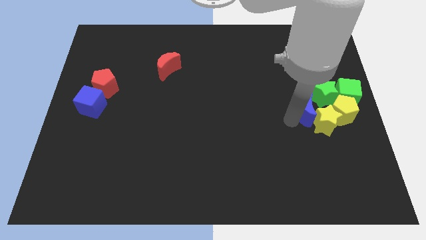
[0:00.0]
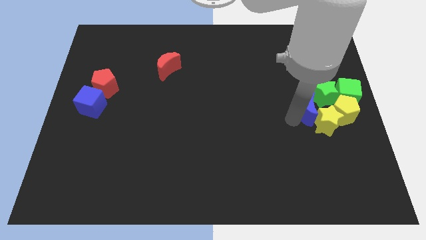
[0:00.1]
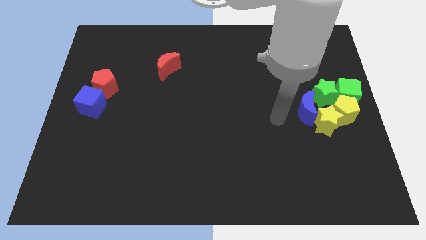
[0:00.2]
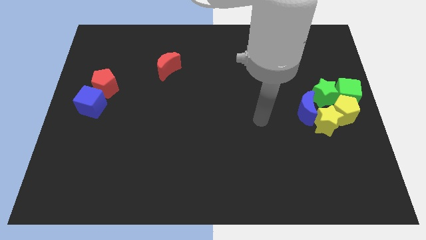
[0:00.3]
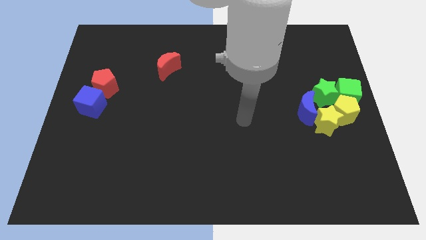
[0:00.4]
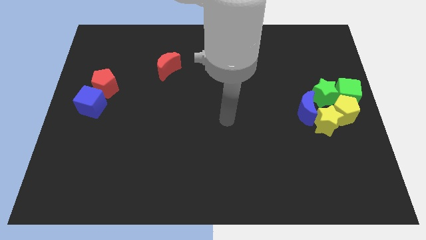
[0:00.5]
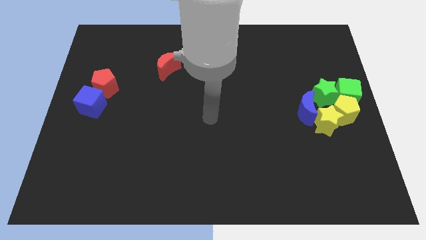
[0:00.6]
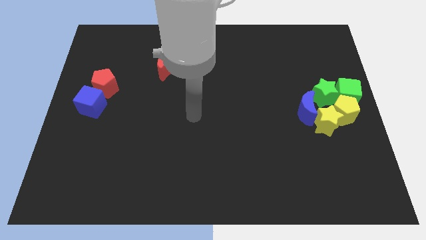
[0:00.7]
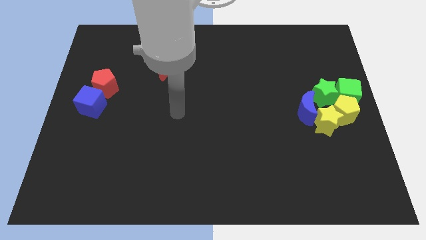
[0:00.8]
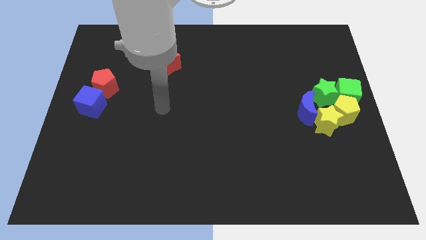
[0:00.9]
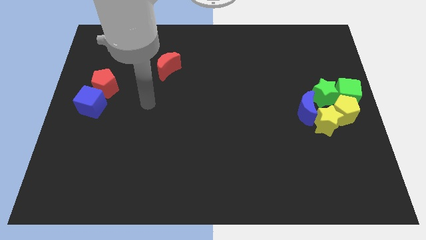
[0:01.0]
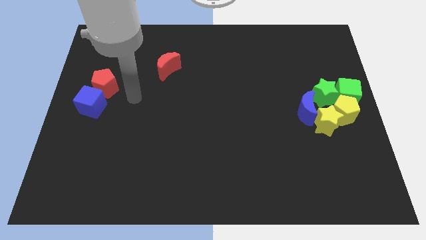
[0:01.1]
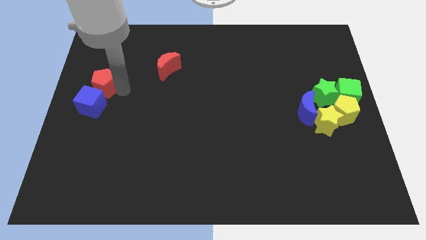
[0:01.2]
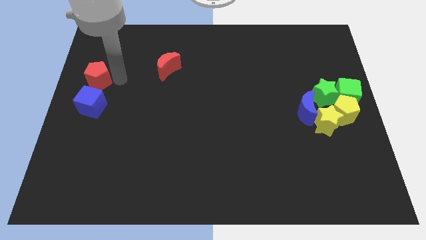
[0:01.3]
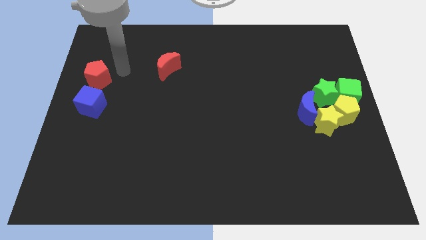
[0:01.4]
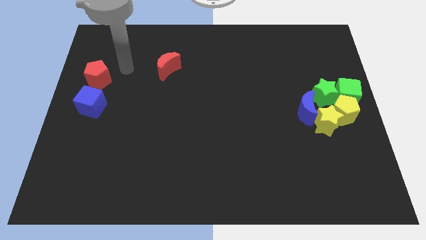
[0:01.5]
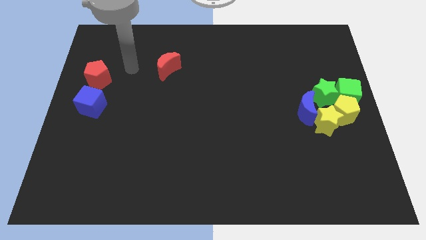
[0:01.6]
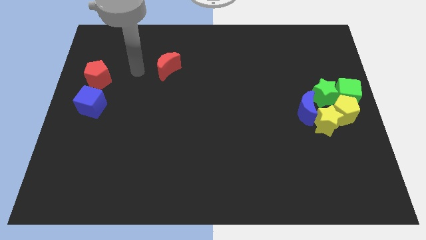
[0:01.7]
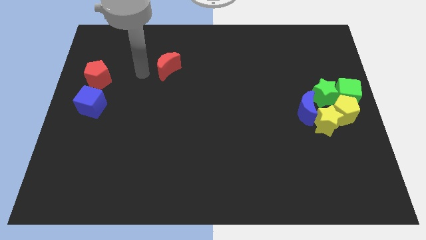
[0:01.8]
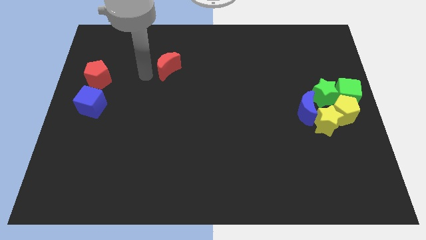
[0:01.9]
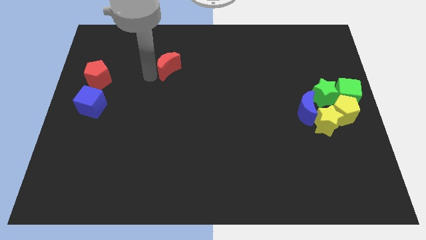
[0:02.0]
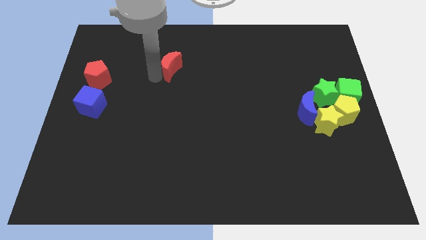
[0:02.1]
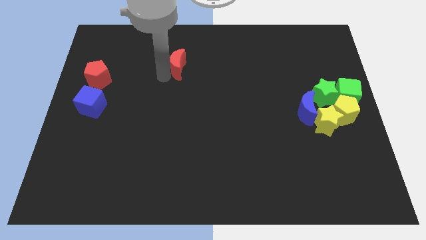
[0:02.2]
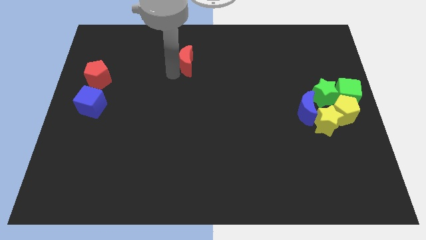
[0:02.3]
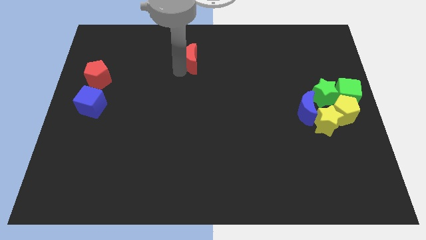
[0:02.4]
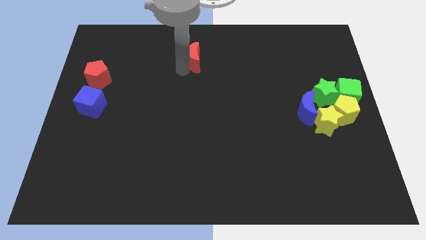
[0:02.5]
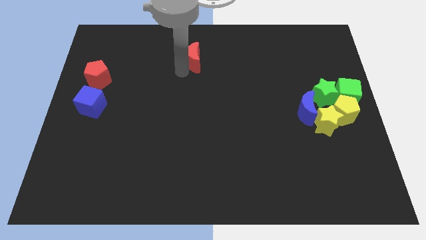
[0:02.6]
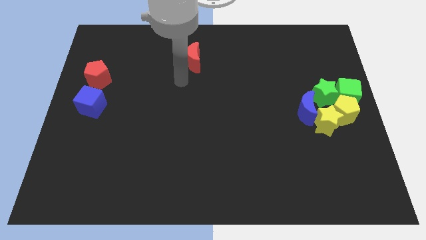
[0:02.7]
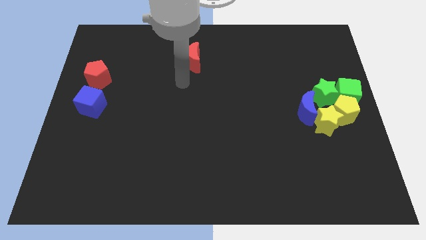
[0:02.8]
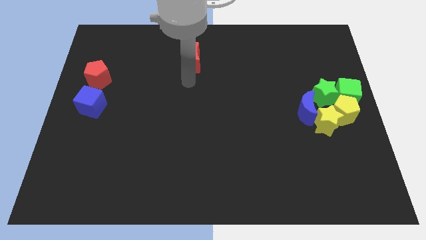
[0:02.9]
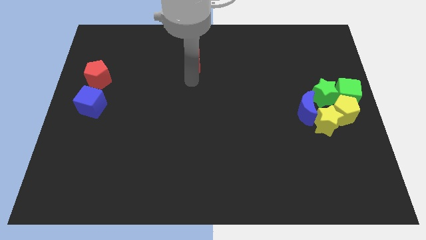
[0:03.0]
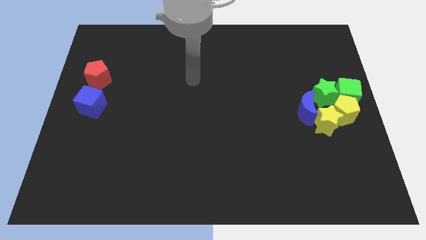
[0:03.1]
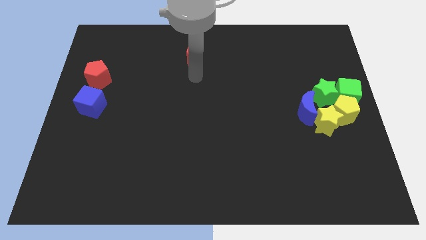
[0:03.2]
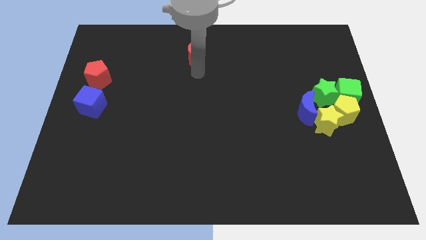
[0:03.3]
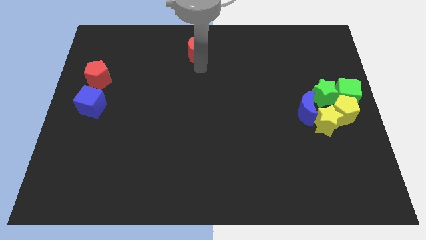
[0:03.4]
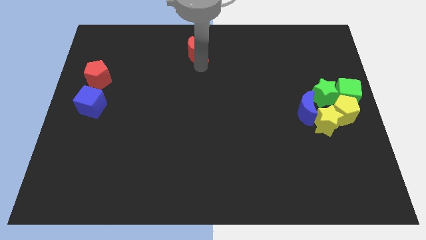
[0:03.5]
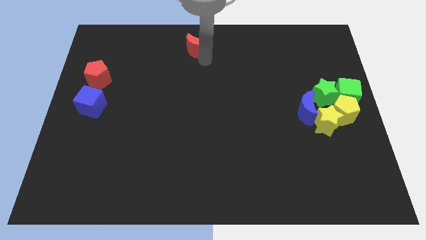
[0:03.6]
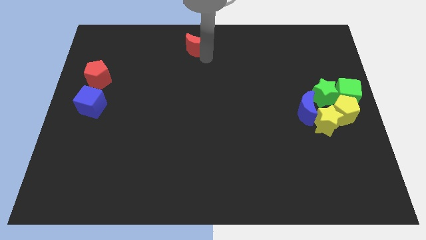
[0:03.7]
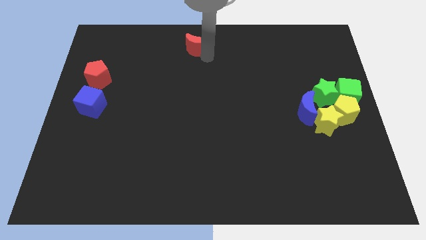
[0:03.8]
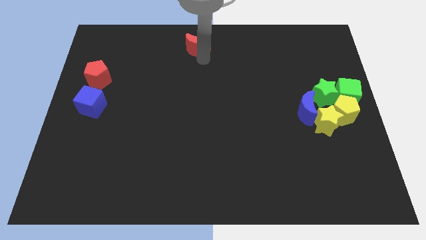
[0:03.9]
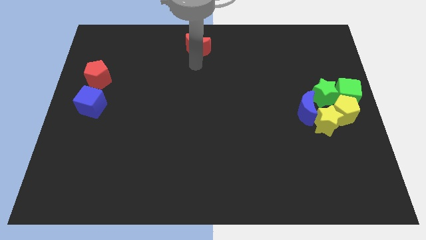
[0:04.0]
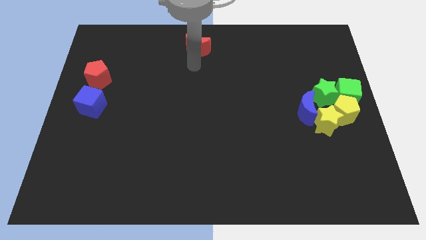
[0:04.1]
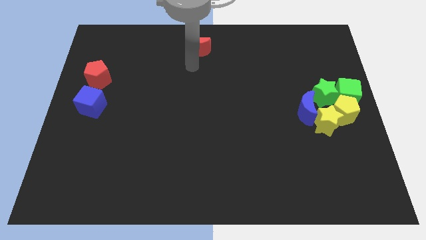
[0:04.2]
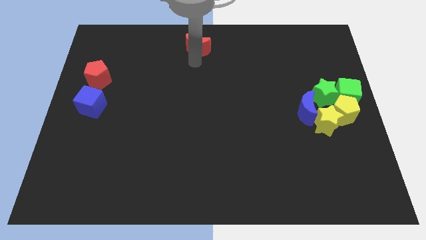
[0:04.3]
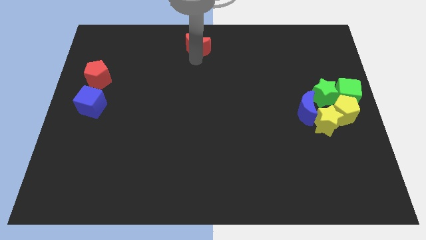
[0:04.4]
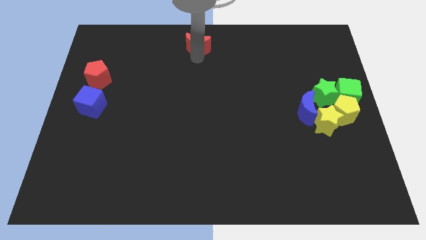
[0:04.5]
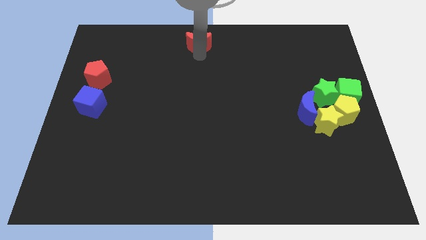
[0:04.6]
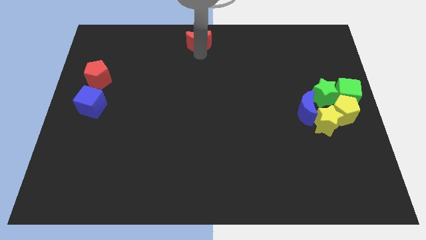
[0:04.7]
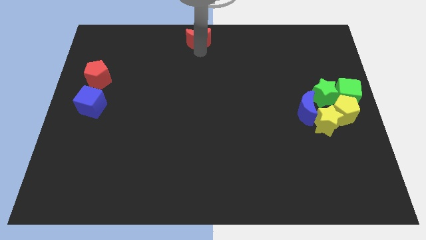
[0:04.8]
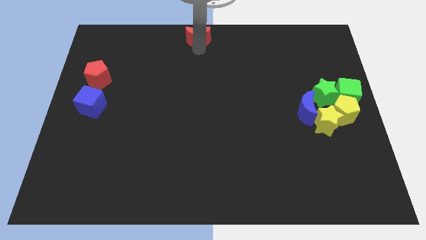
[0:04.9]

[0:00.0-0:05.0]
push the red crescent to the top center of the board

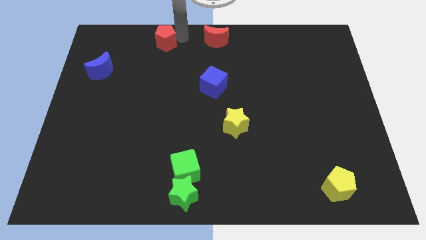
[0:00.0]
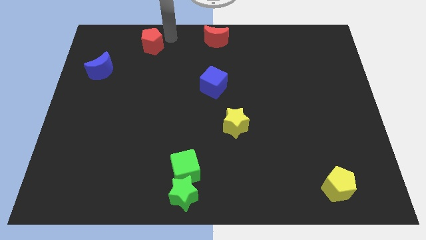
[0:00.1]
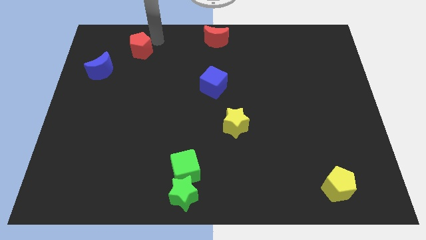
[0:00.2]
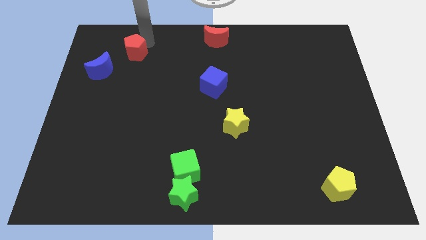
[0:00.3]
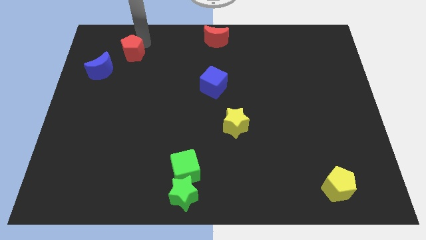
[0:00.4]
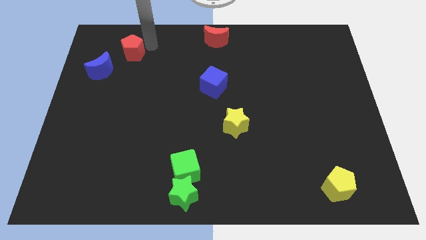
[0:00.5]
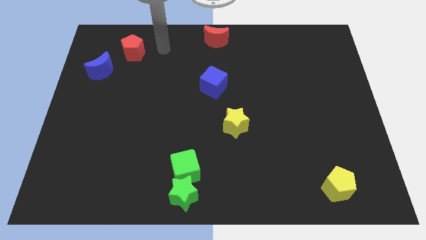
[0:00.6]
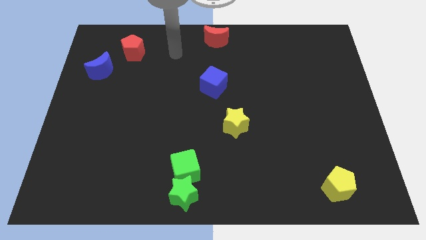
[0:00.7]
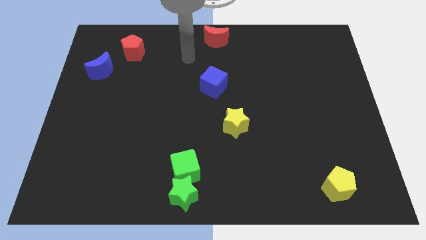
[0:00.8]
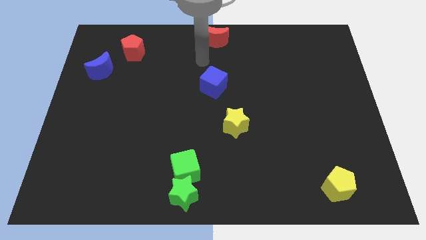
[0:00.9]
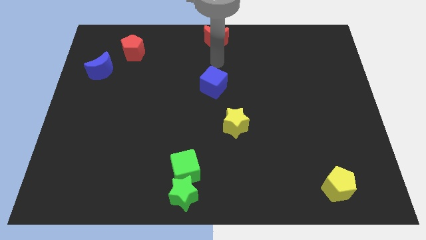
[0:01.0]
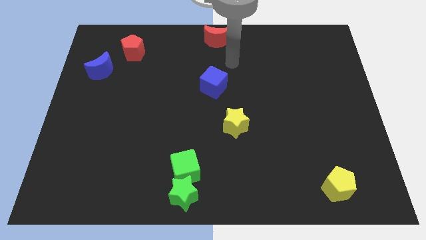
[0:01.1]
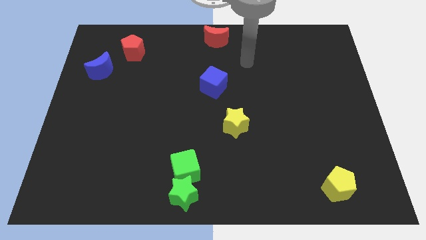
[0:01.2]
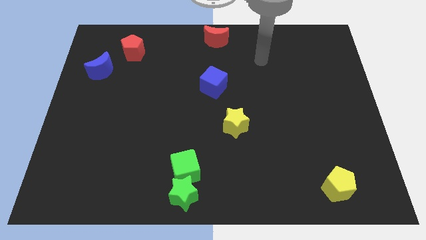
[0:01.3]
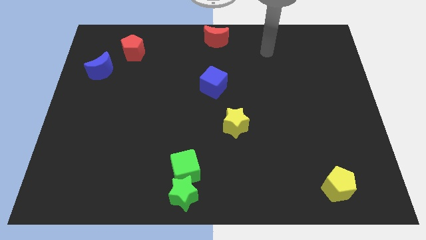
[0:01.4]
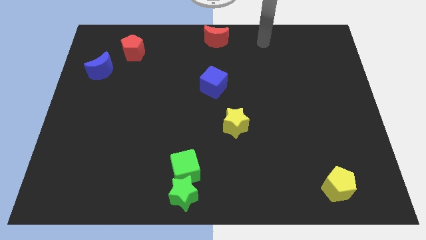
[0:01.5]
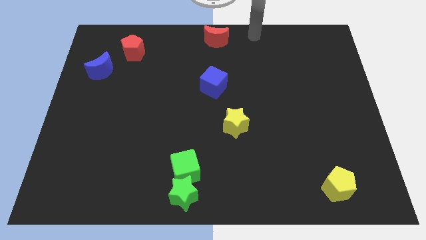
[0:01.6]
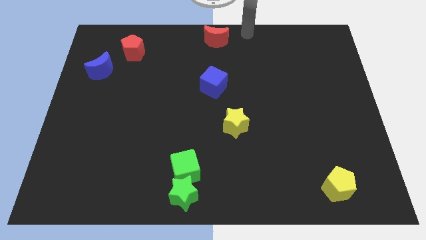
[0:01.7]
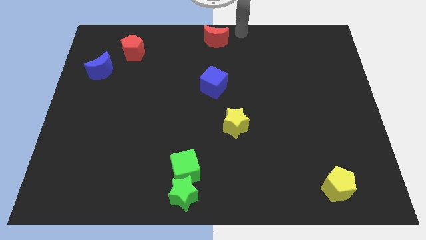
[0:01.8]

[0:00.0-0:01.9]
push the red pentagon to the left side of the board

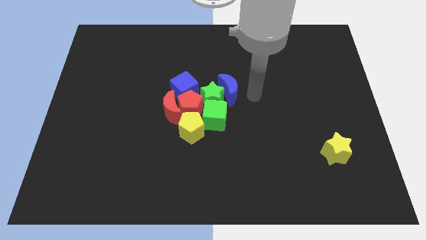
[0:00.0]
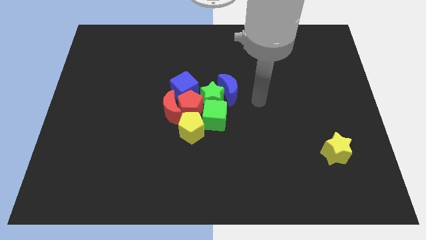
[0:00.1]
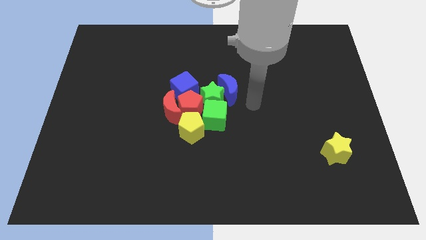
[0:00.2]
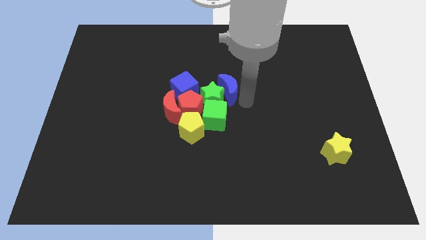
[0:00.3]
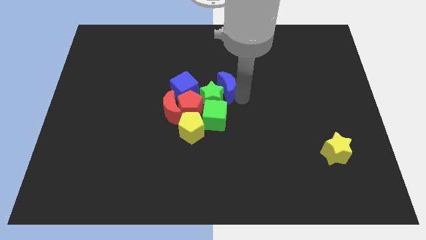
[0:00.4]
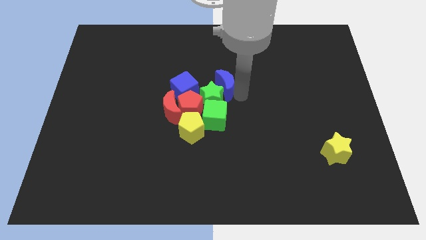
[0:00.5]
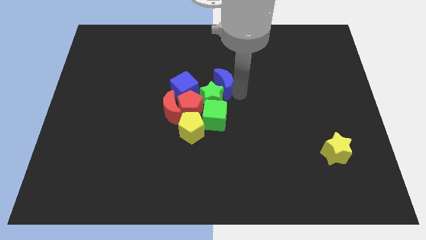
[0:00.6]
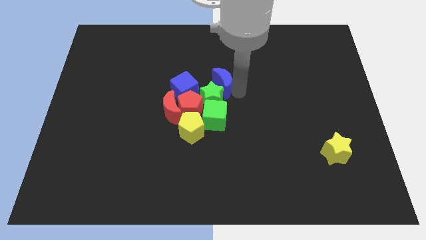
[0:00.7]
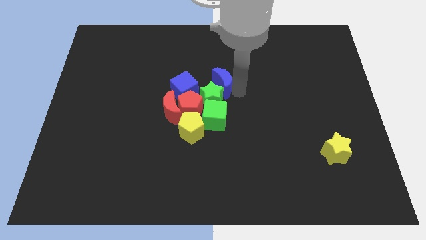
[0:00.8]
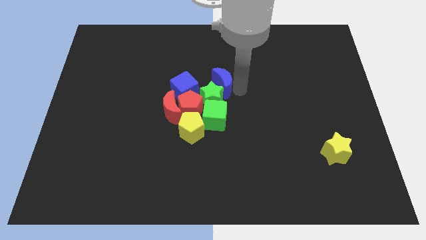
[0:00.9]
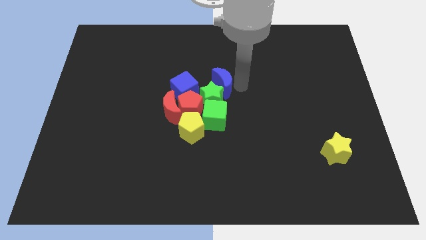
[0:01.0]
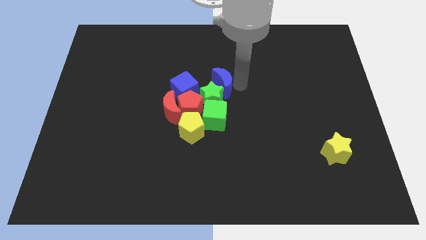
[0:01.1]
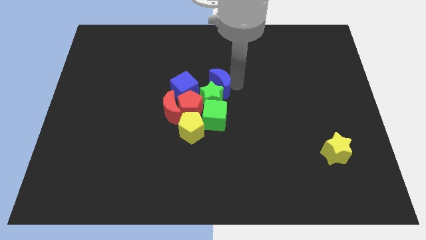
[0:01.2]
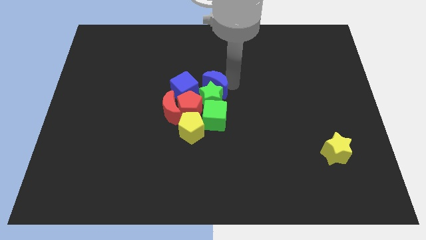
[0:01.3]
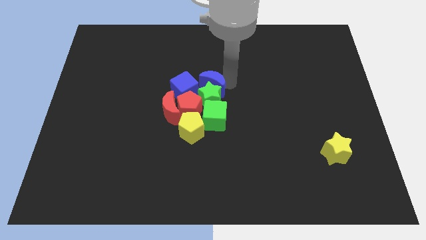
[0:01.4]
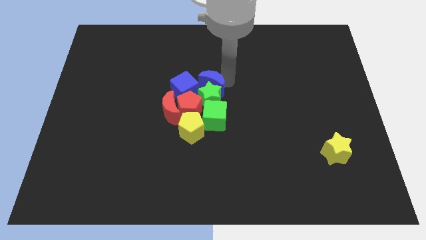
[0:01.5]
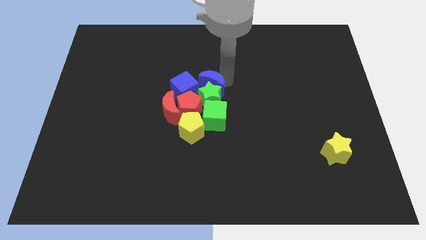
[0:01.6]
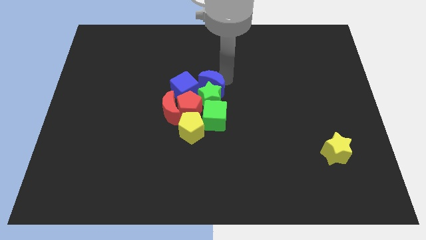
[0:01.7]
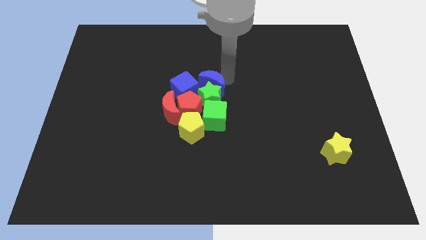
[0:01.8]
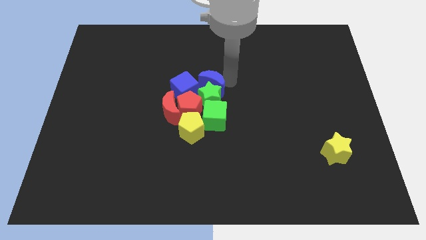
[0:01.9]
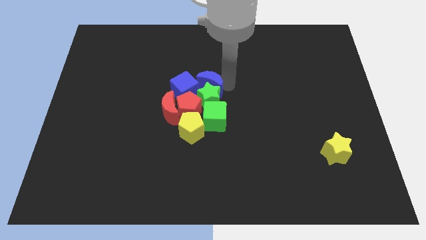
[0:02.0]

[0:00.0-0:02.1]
place the blue crescent above the green star

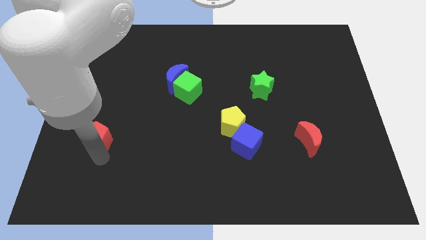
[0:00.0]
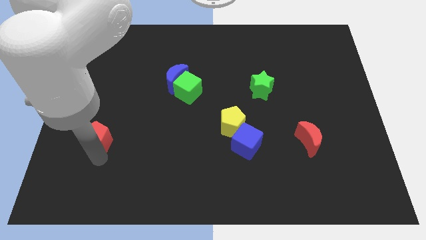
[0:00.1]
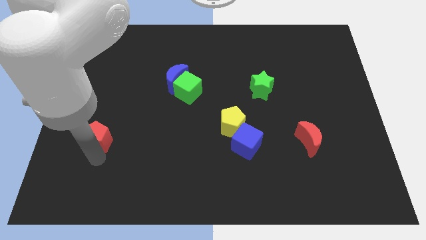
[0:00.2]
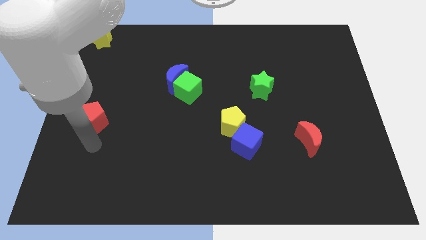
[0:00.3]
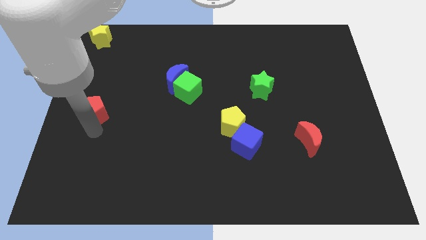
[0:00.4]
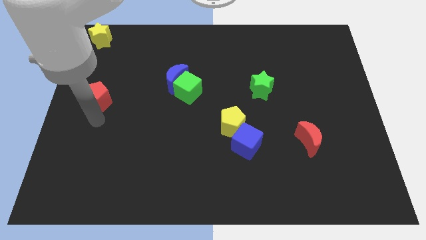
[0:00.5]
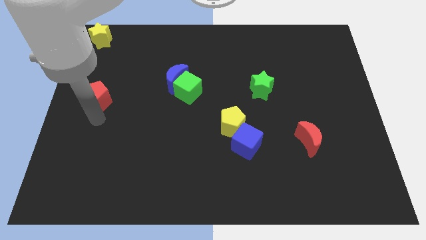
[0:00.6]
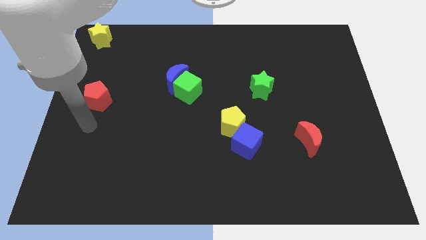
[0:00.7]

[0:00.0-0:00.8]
move the red penatgon to the left of green cube
